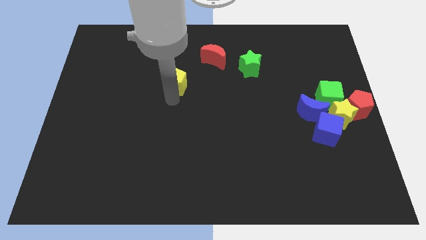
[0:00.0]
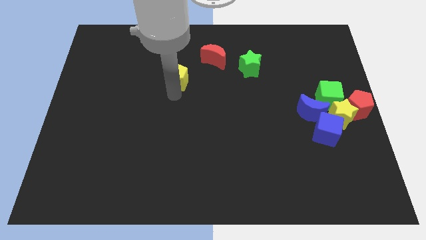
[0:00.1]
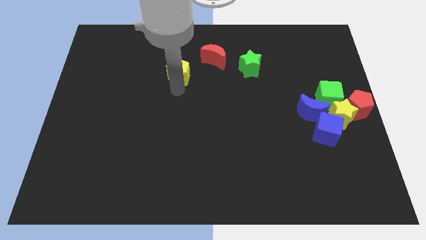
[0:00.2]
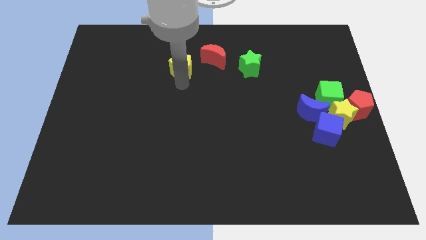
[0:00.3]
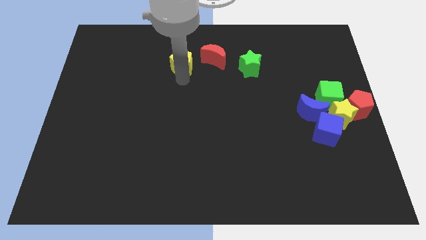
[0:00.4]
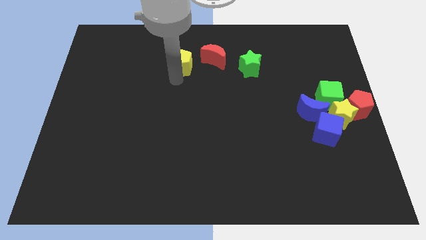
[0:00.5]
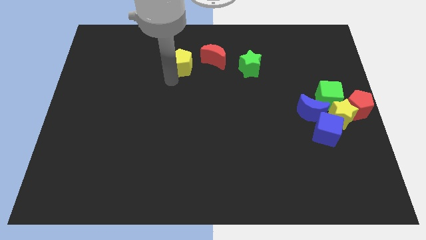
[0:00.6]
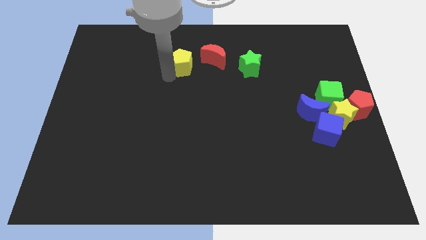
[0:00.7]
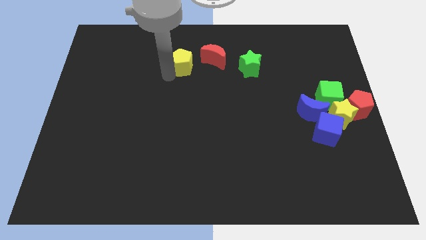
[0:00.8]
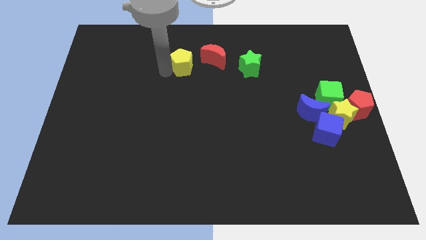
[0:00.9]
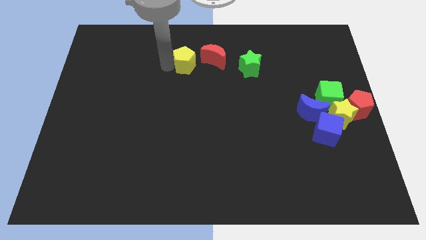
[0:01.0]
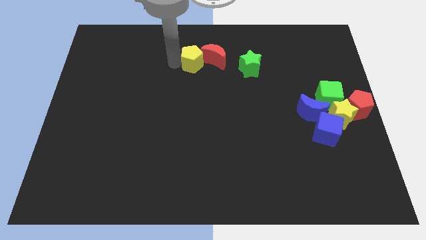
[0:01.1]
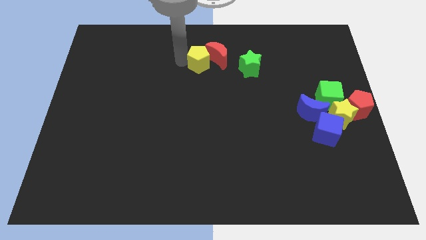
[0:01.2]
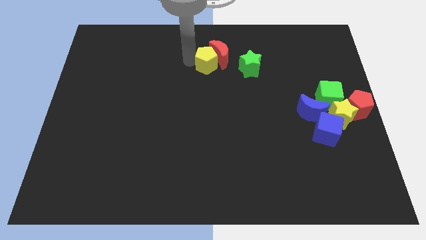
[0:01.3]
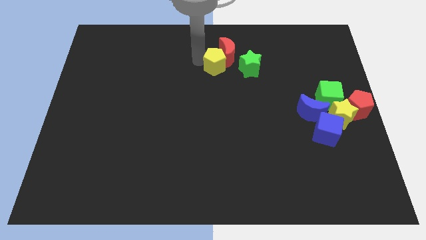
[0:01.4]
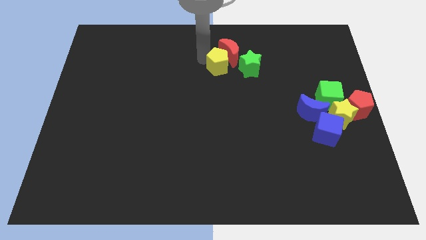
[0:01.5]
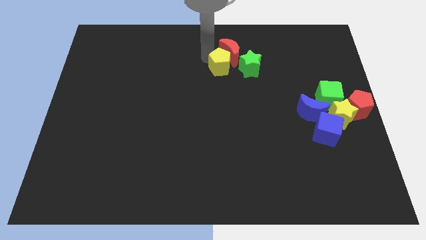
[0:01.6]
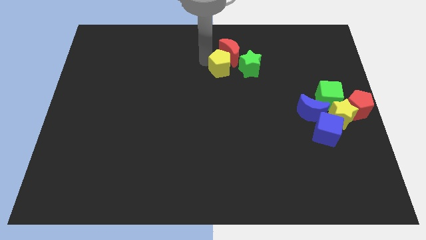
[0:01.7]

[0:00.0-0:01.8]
push the yellow pentagon into the red crescent

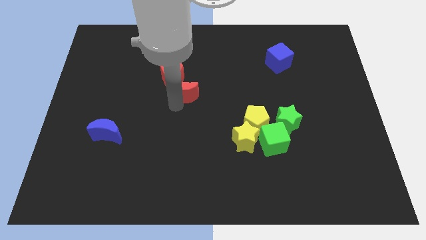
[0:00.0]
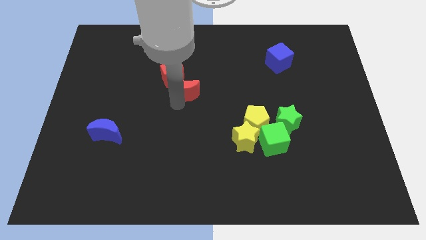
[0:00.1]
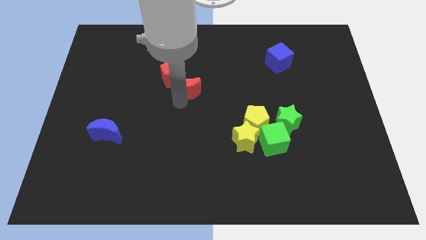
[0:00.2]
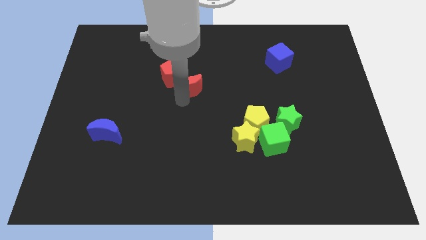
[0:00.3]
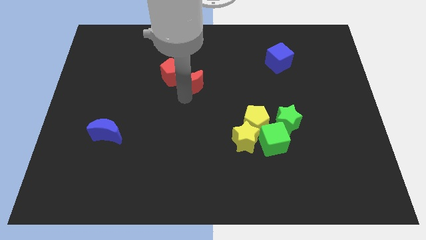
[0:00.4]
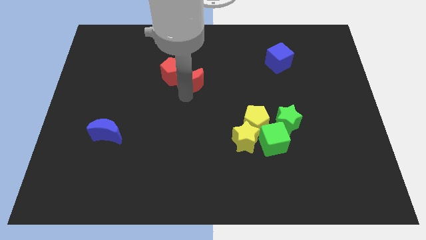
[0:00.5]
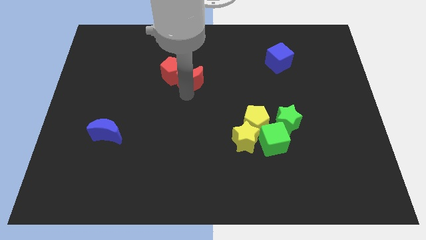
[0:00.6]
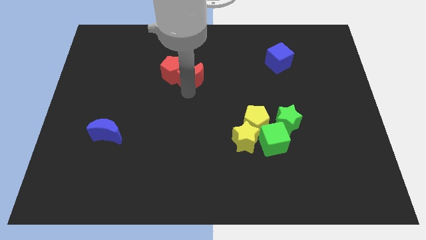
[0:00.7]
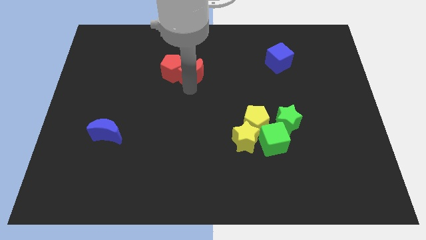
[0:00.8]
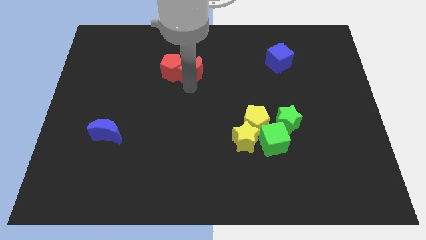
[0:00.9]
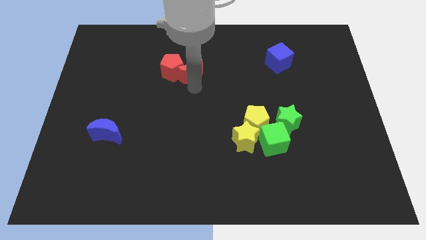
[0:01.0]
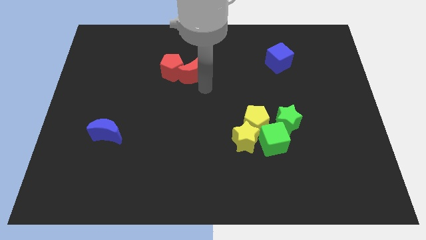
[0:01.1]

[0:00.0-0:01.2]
push the red crescent to the right of the red pentagon

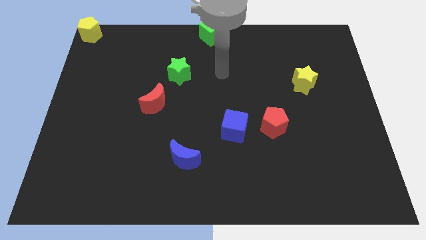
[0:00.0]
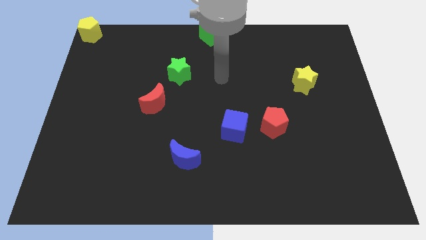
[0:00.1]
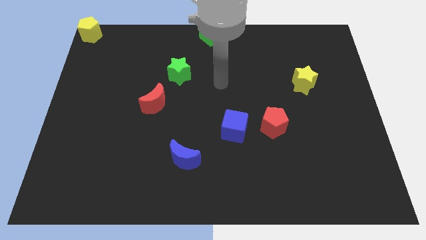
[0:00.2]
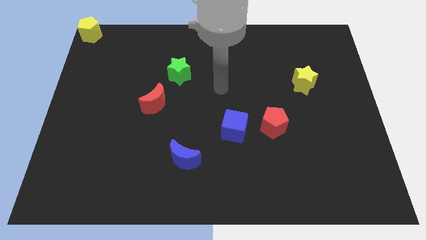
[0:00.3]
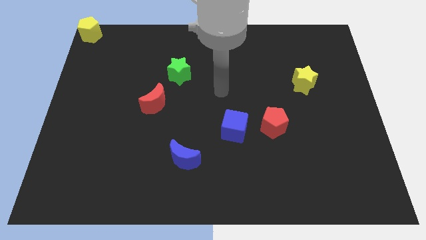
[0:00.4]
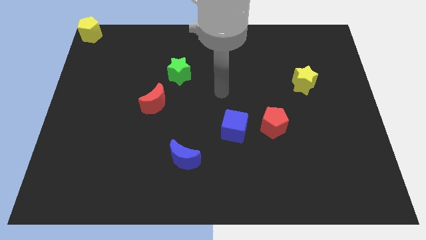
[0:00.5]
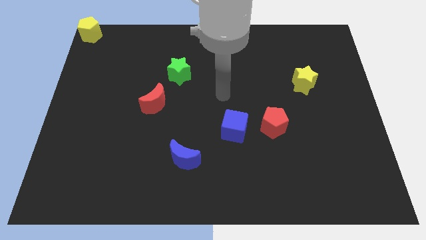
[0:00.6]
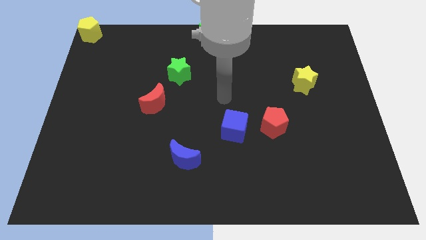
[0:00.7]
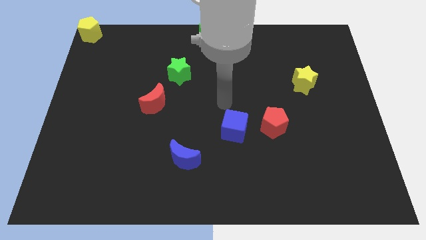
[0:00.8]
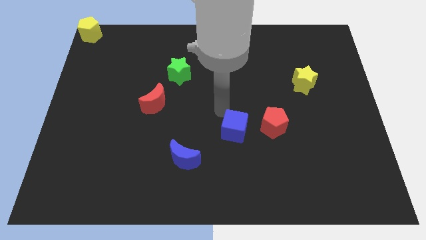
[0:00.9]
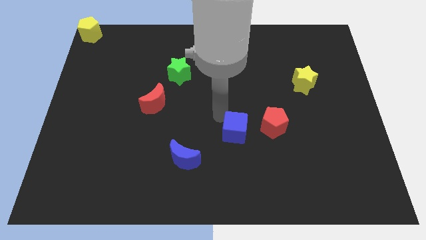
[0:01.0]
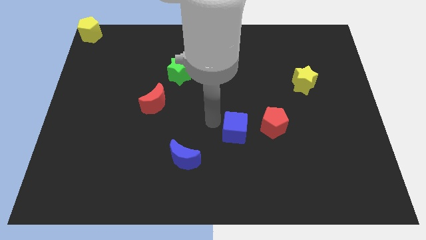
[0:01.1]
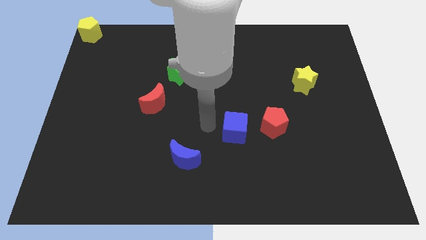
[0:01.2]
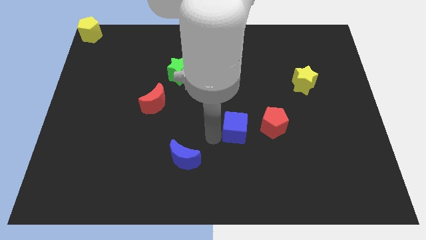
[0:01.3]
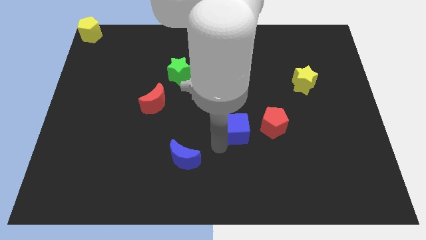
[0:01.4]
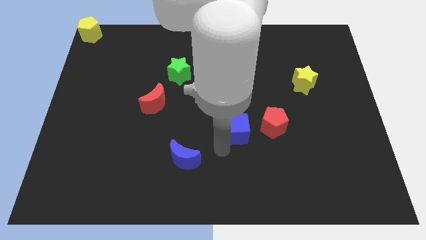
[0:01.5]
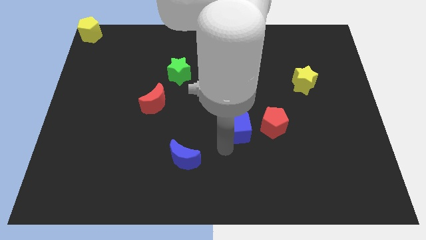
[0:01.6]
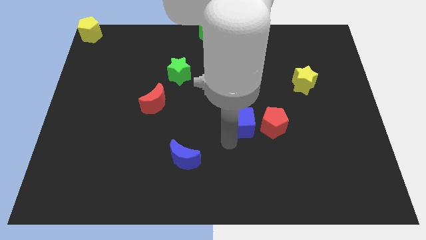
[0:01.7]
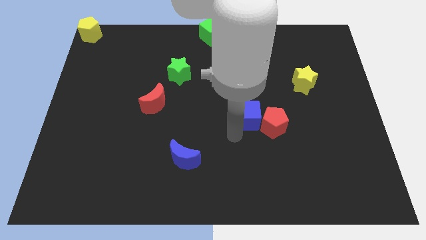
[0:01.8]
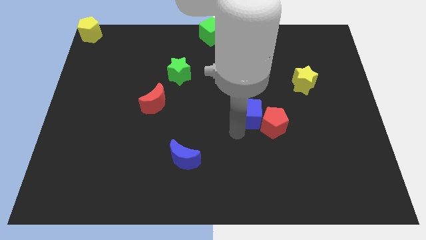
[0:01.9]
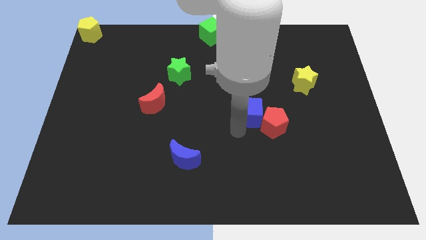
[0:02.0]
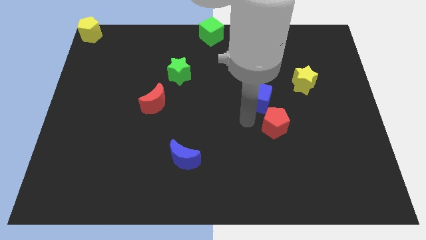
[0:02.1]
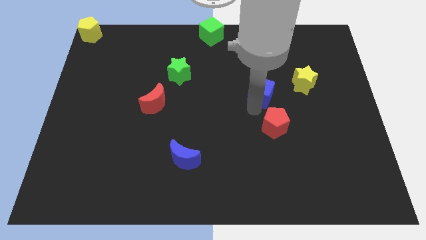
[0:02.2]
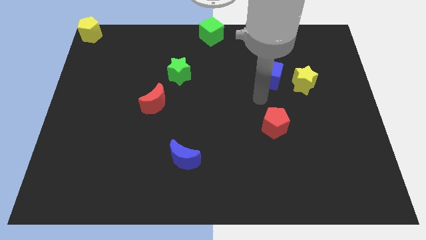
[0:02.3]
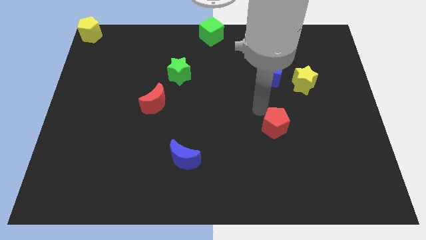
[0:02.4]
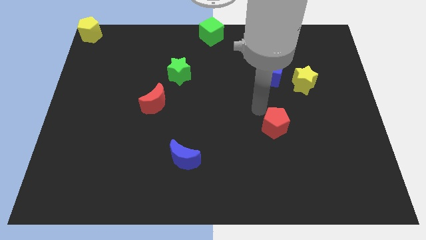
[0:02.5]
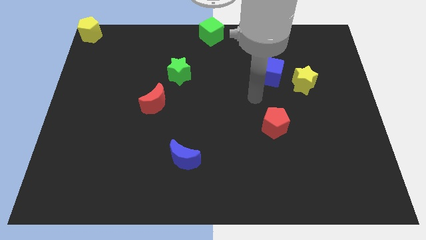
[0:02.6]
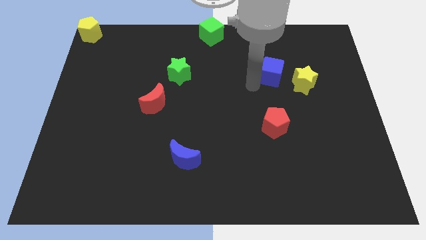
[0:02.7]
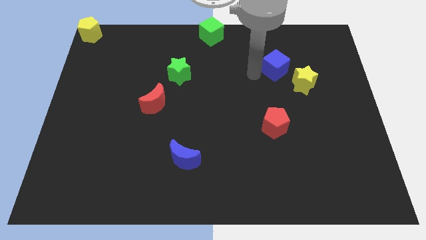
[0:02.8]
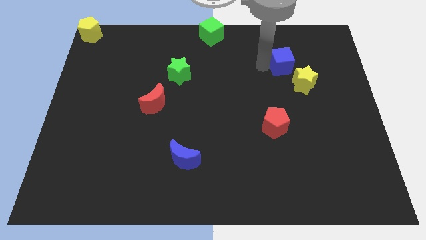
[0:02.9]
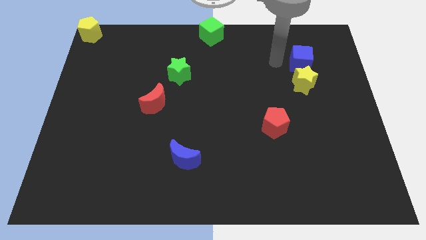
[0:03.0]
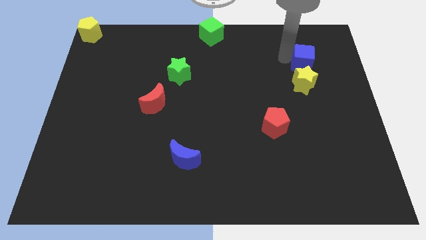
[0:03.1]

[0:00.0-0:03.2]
place the blue cube above the yellow star

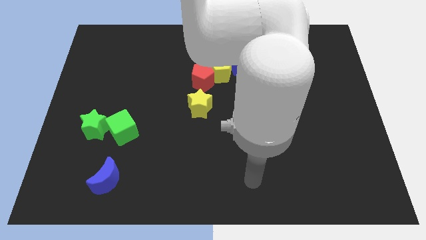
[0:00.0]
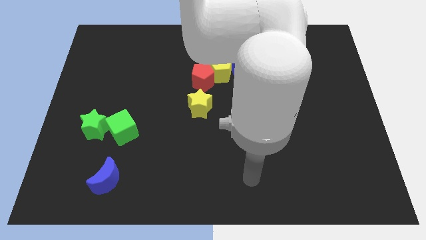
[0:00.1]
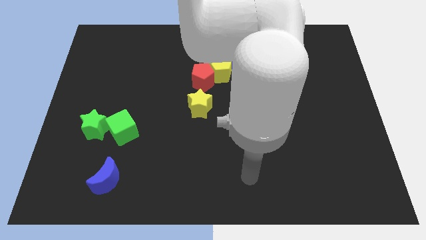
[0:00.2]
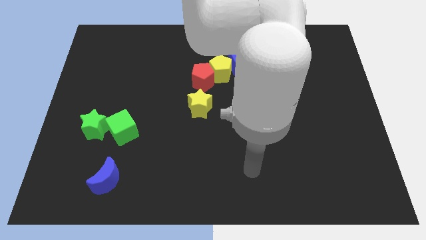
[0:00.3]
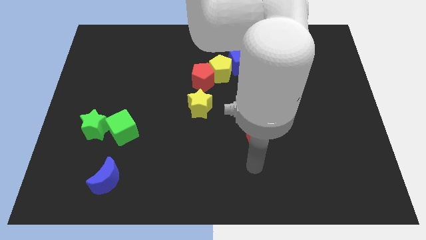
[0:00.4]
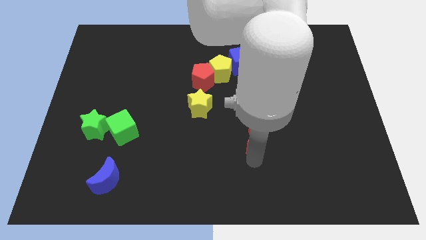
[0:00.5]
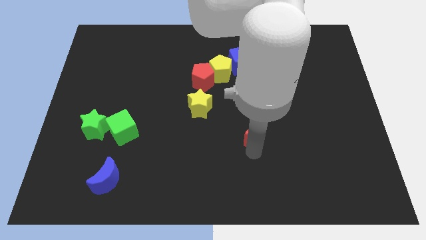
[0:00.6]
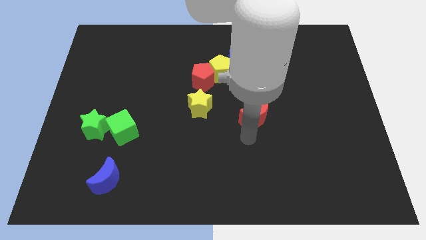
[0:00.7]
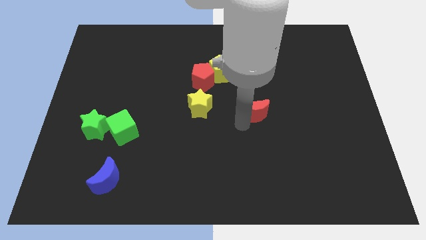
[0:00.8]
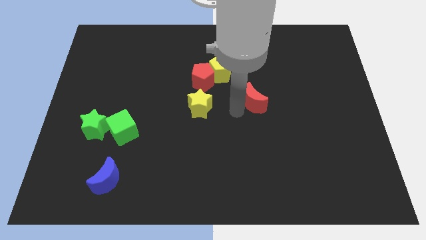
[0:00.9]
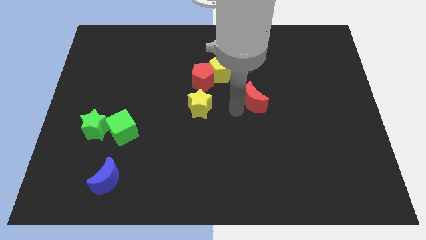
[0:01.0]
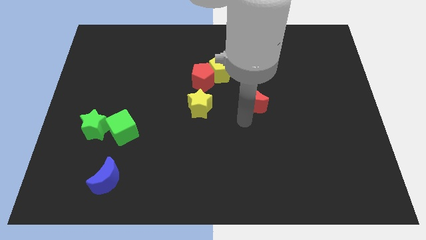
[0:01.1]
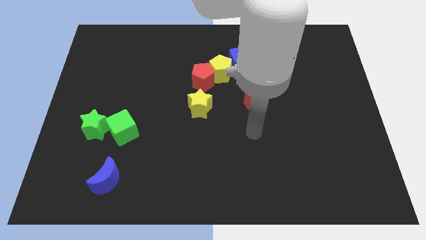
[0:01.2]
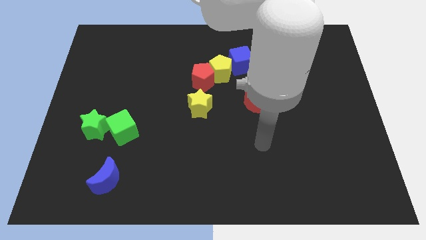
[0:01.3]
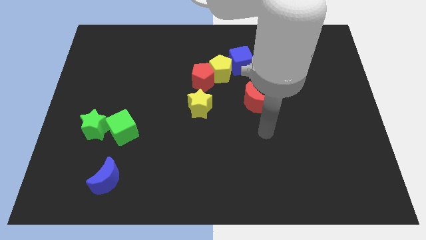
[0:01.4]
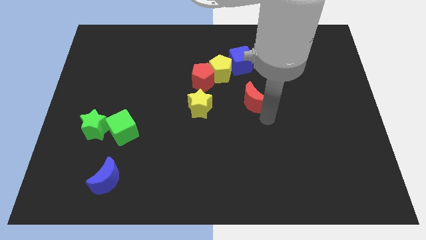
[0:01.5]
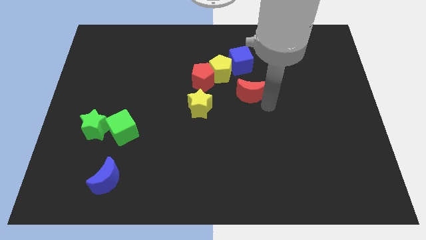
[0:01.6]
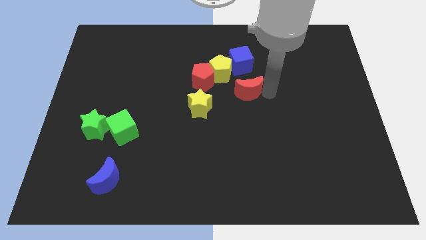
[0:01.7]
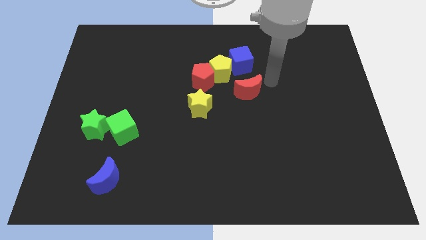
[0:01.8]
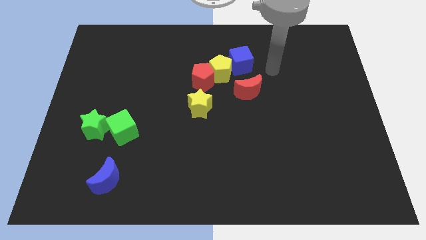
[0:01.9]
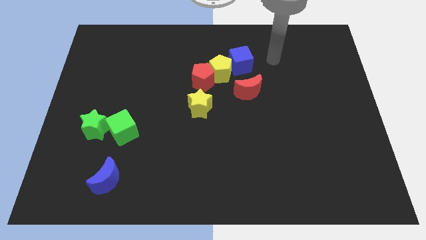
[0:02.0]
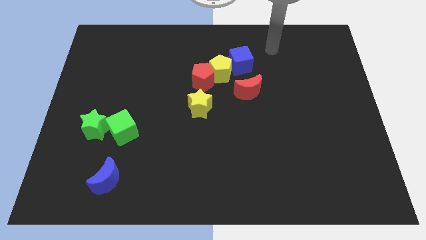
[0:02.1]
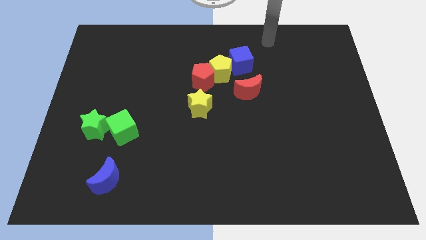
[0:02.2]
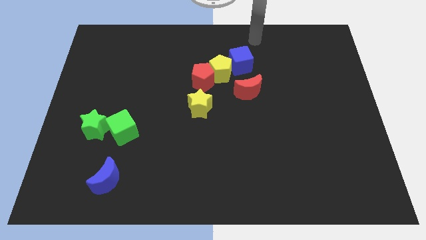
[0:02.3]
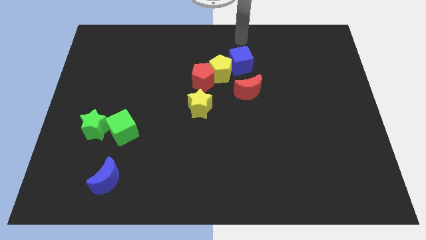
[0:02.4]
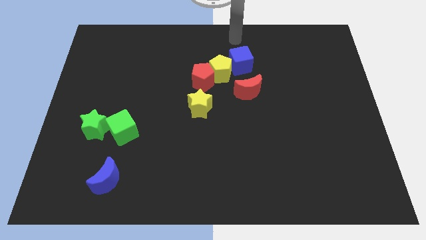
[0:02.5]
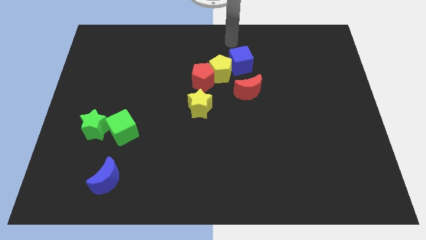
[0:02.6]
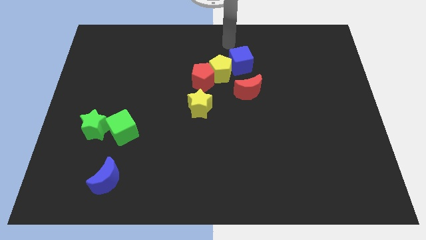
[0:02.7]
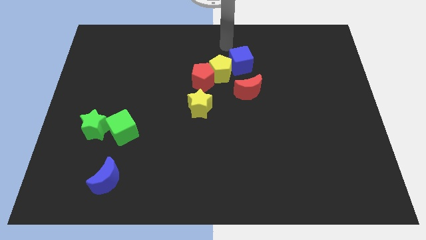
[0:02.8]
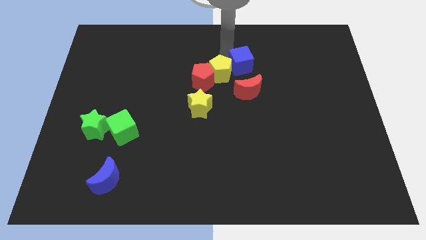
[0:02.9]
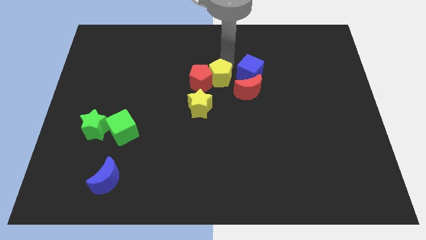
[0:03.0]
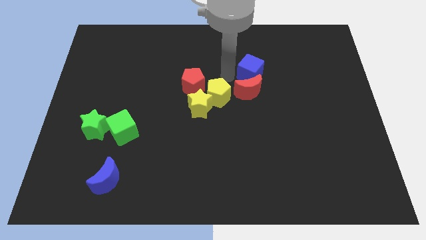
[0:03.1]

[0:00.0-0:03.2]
push the red crescent towards the blue cube
